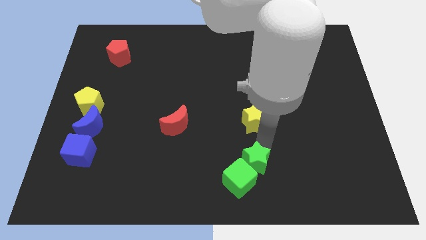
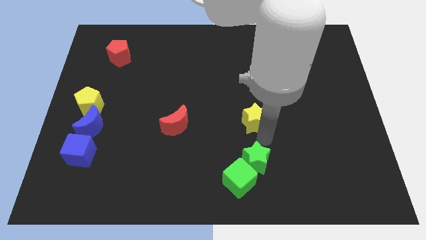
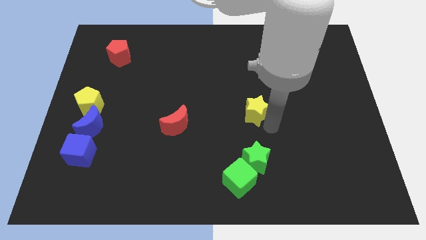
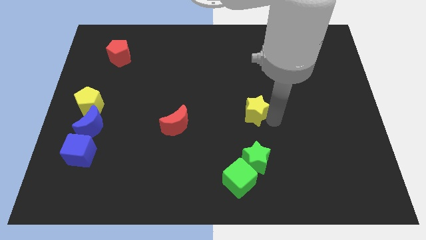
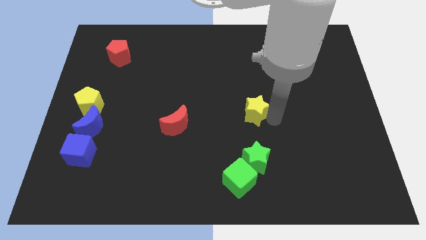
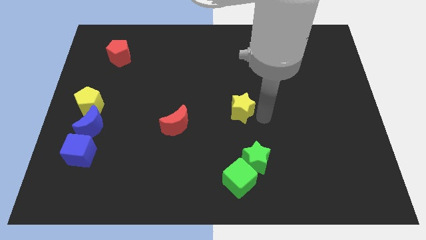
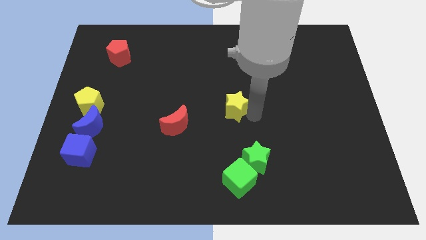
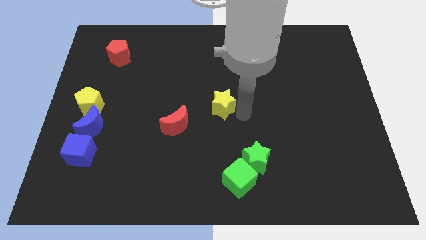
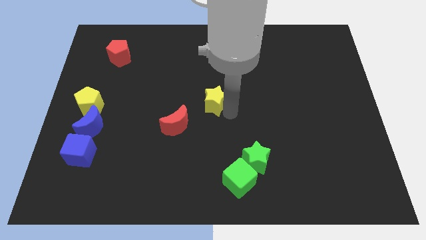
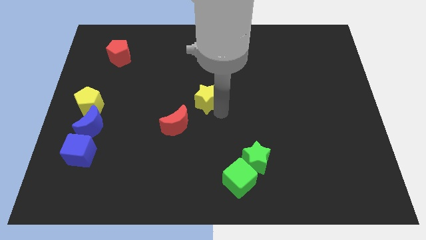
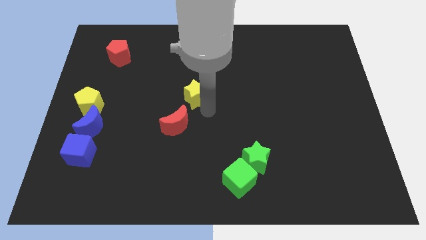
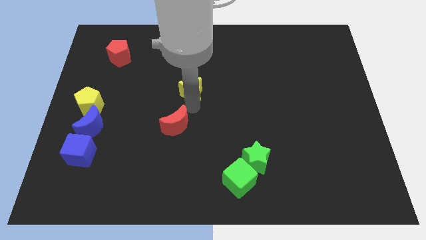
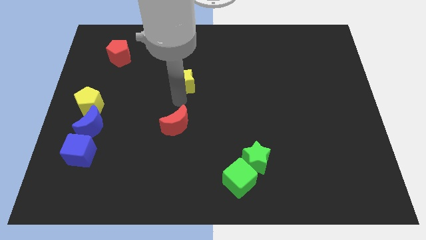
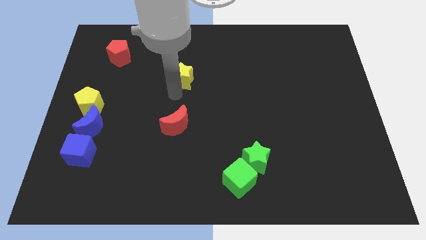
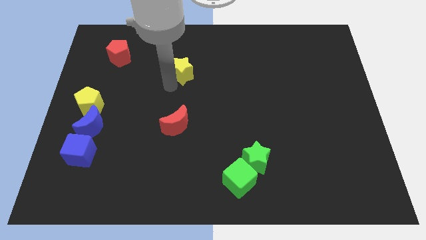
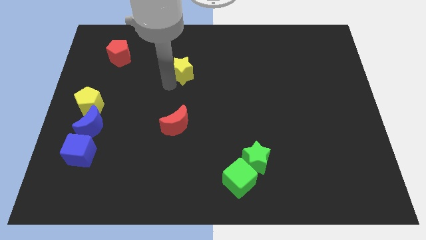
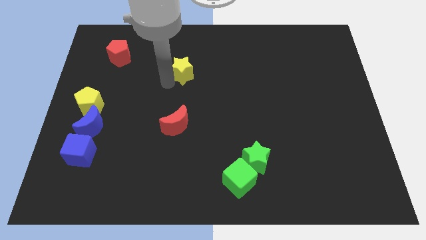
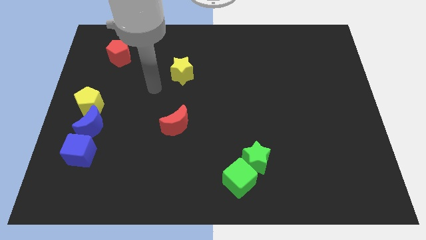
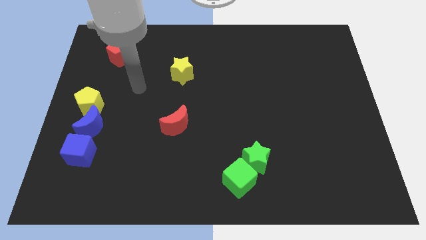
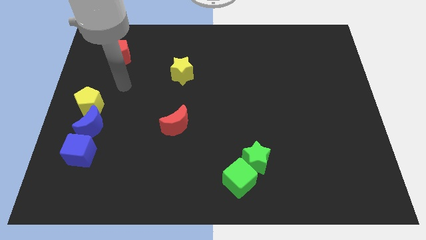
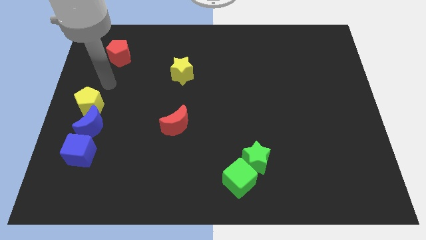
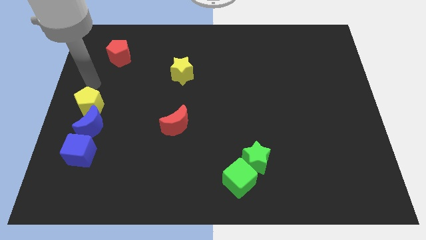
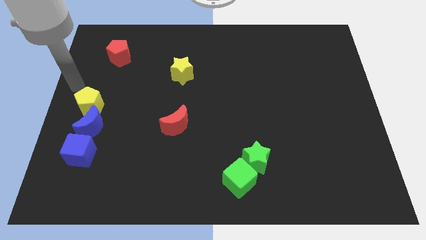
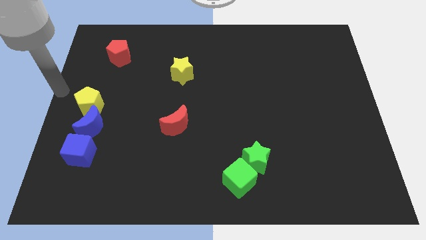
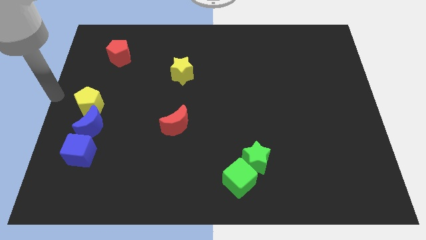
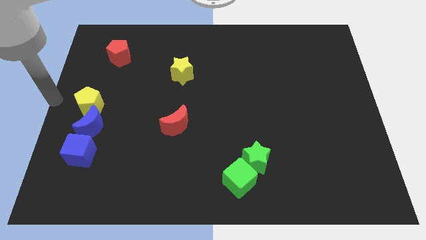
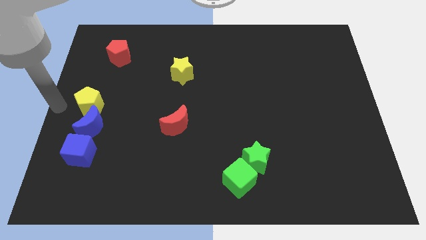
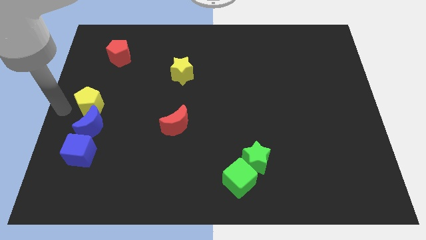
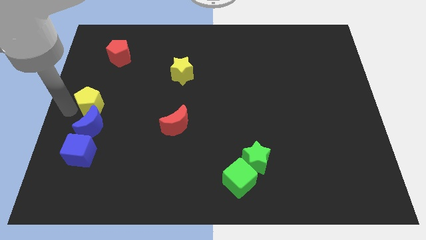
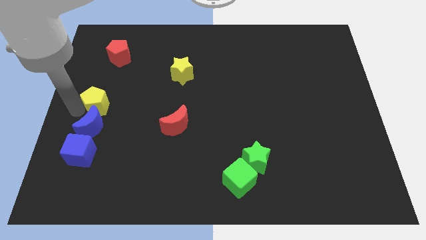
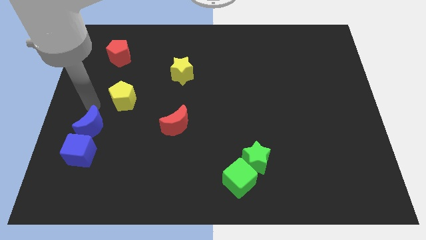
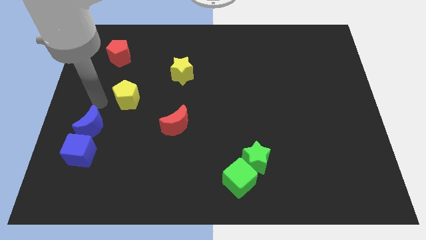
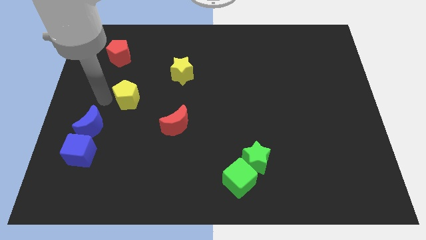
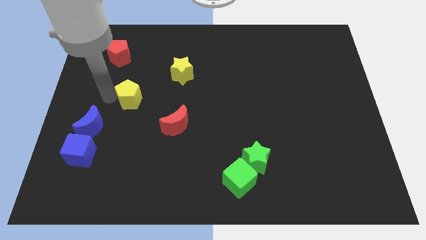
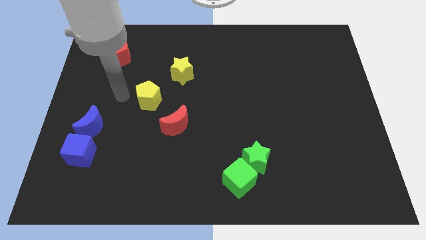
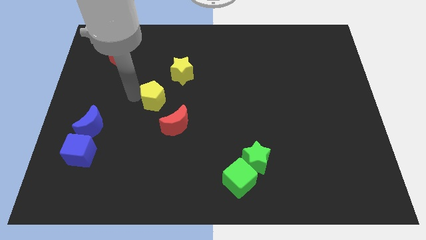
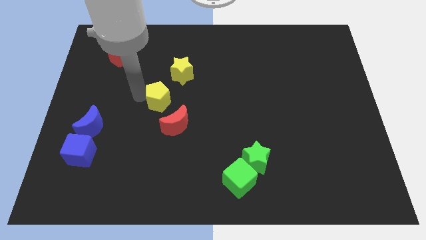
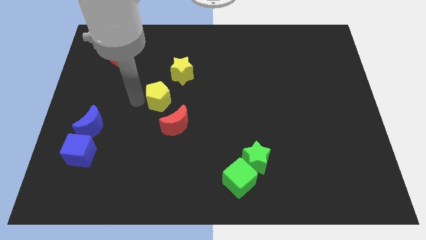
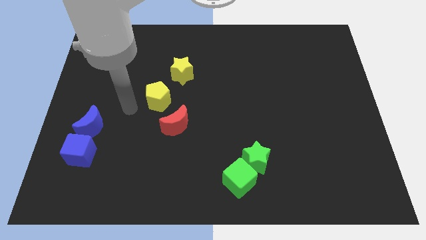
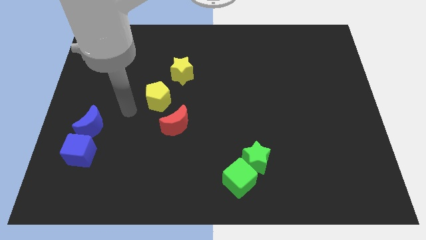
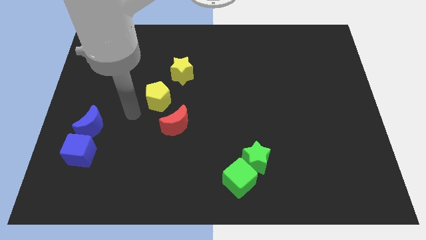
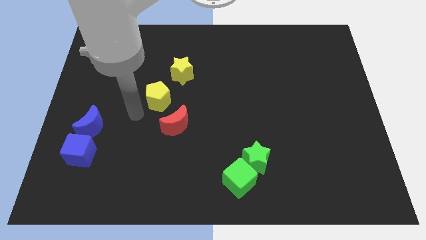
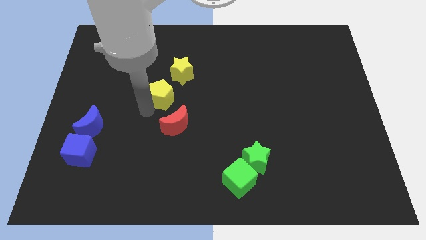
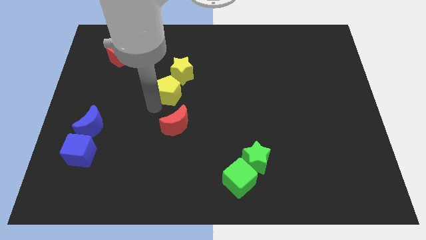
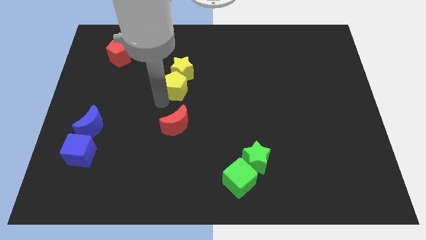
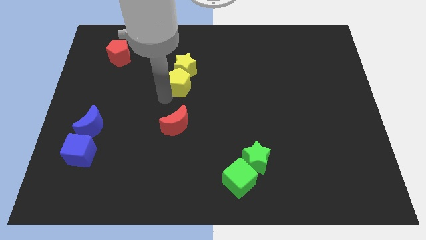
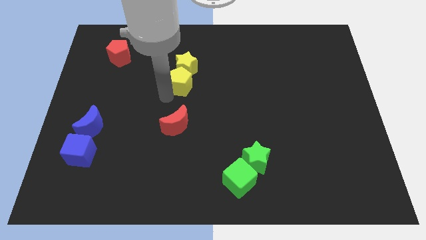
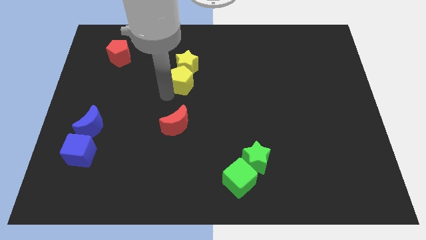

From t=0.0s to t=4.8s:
place yellow star and yellow pentagon vertical to red moon

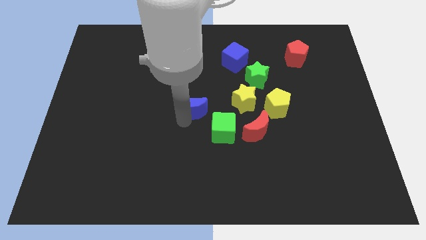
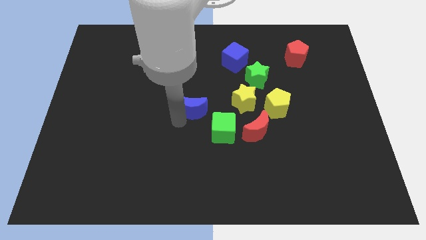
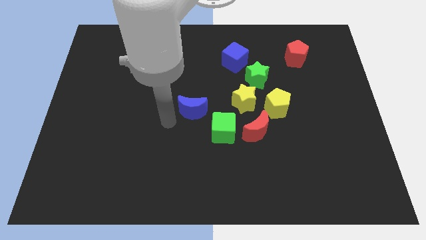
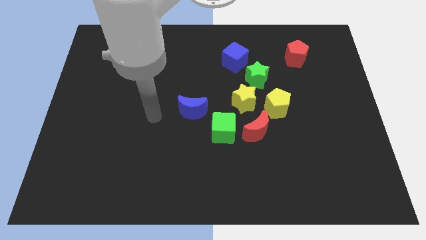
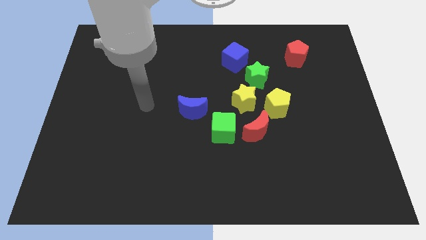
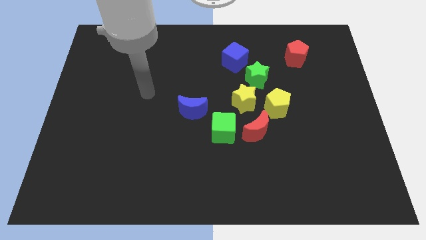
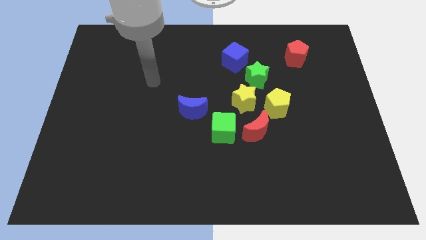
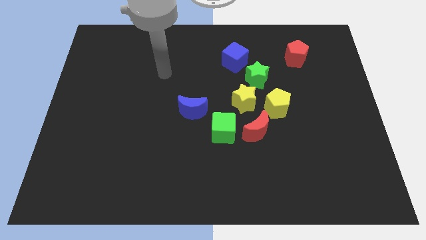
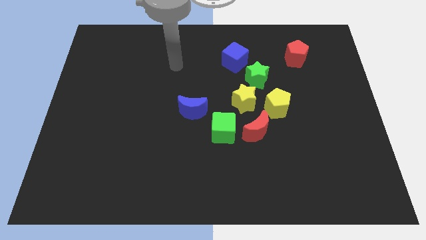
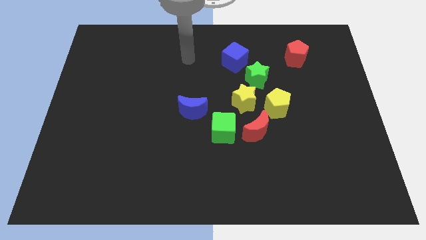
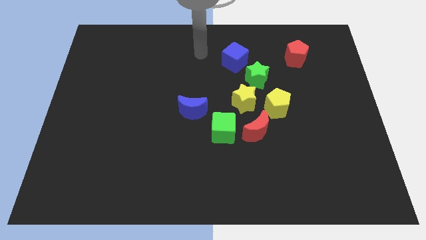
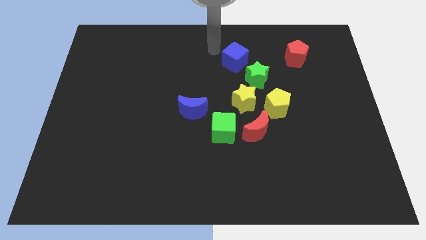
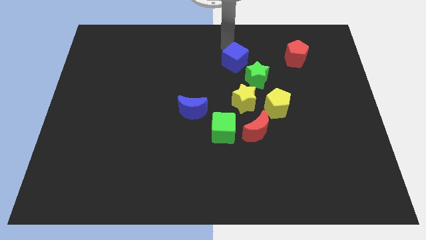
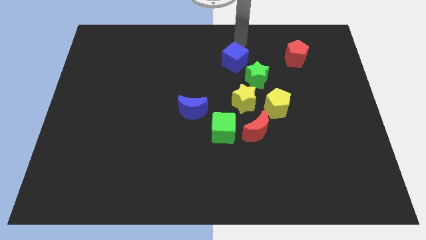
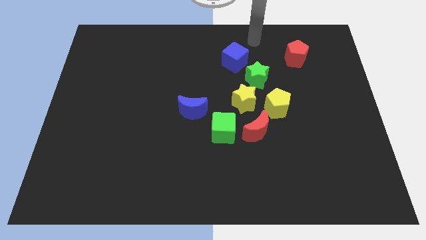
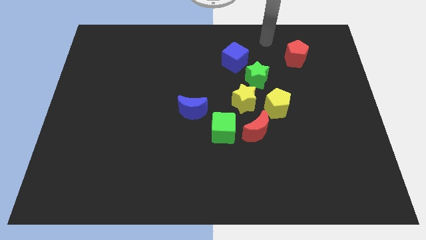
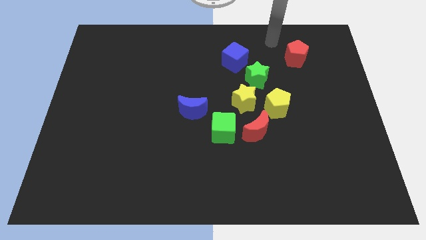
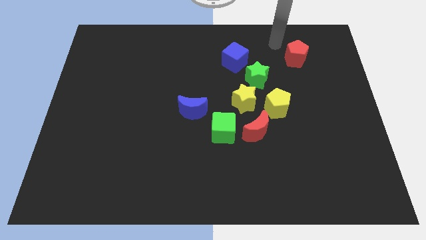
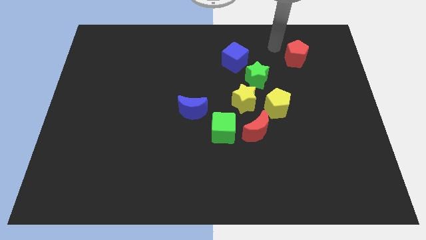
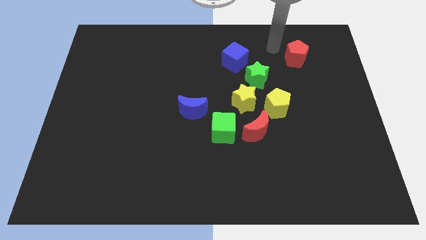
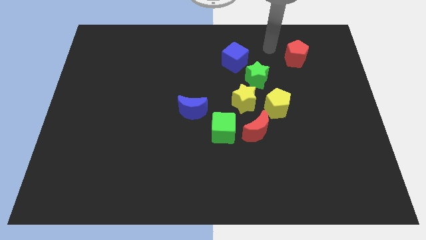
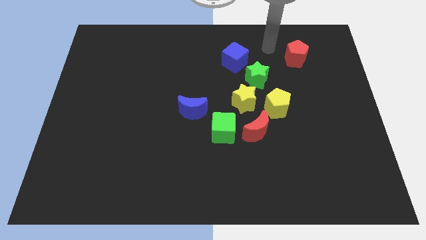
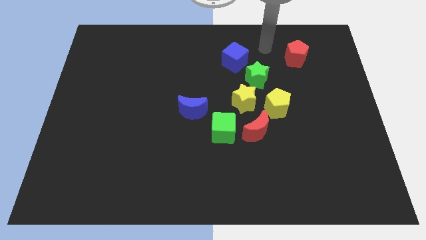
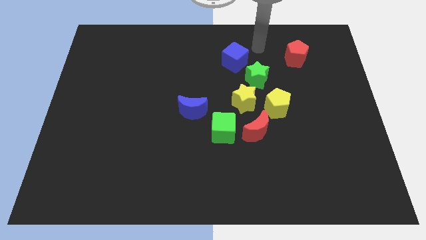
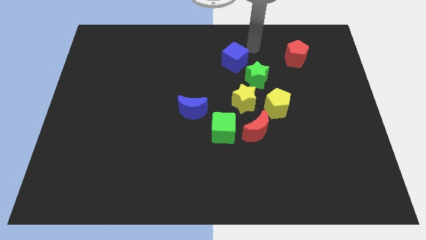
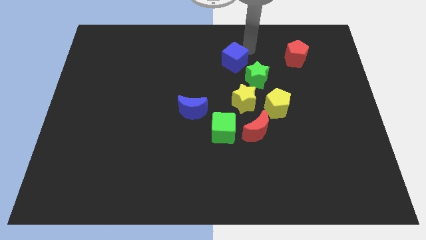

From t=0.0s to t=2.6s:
point your arm at the top right side of blue cube

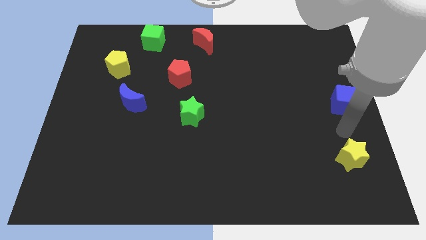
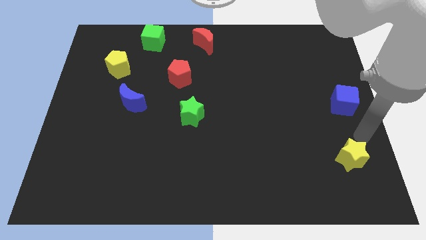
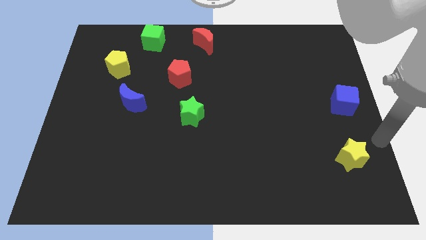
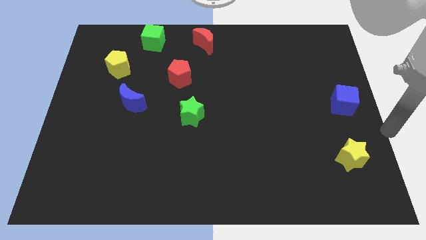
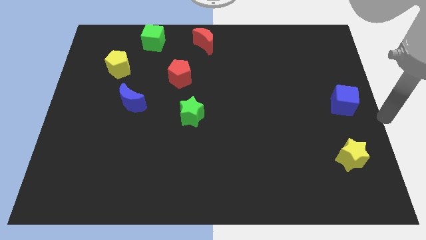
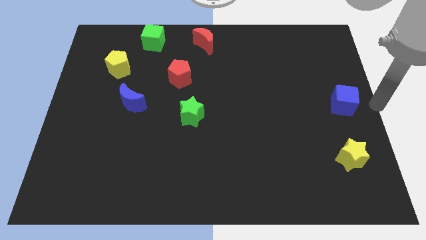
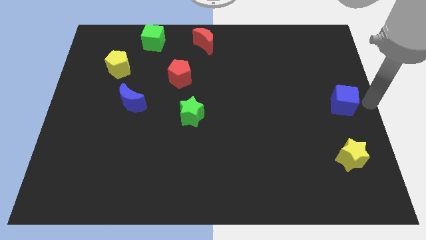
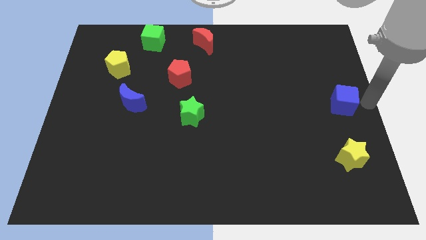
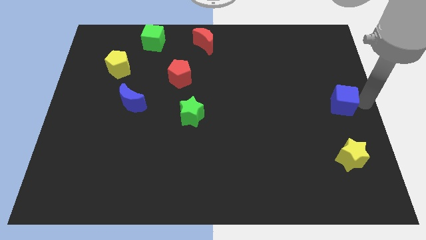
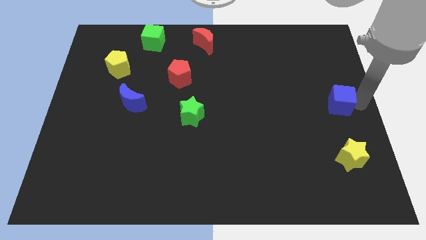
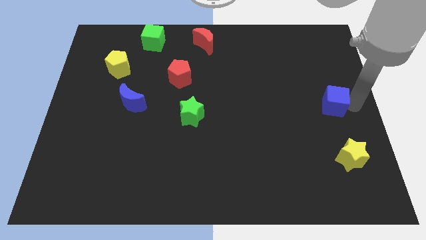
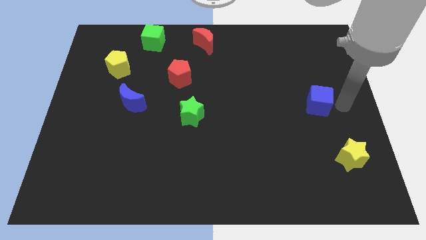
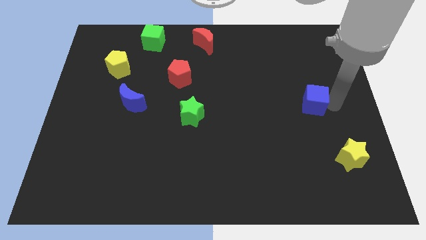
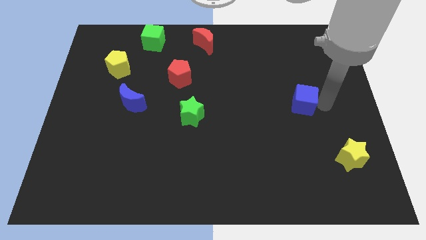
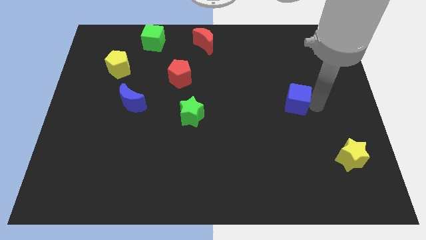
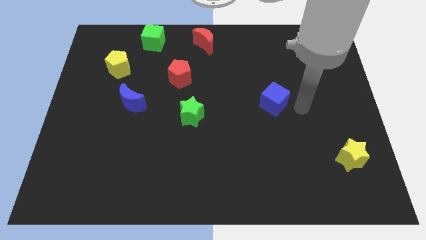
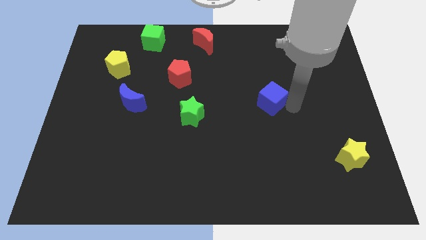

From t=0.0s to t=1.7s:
slide the blue cube to the left side
